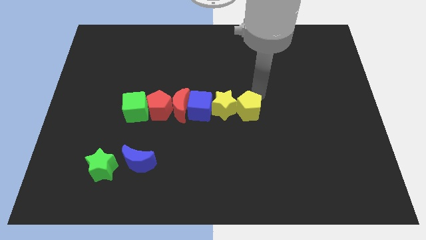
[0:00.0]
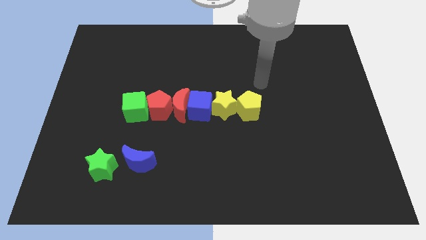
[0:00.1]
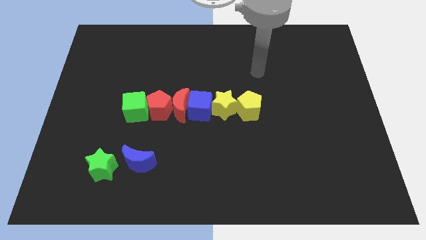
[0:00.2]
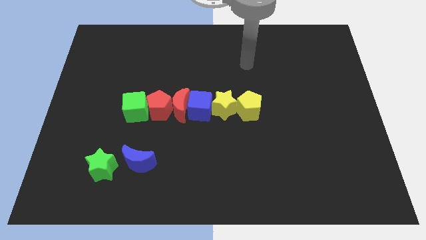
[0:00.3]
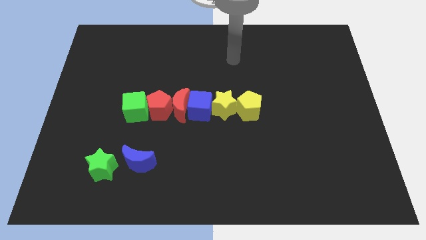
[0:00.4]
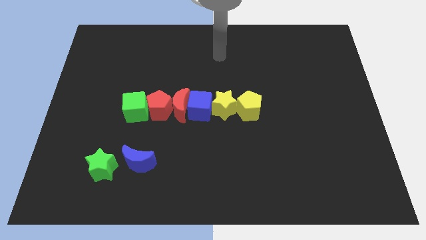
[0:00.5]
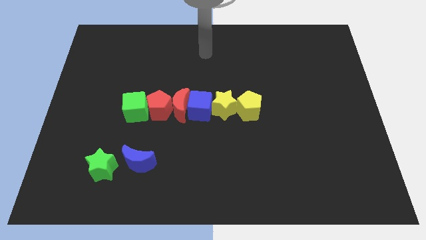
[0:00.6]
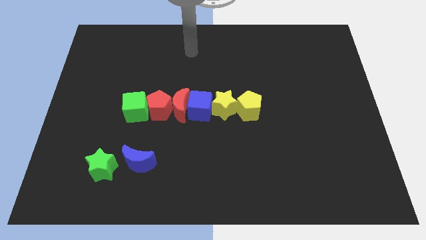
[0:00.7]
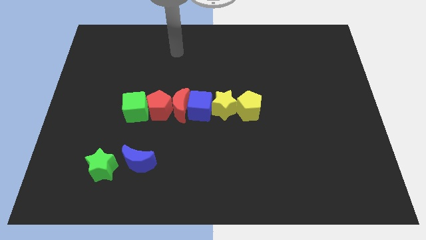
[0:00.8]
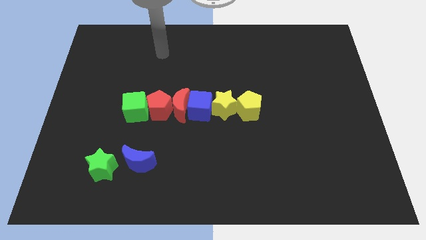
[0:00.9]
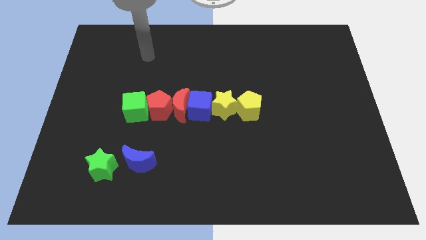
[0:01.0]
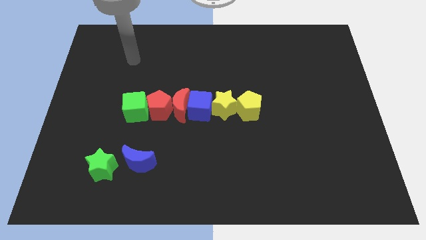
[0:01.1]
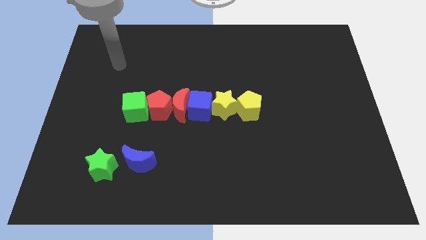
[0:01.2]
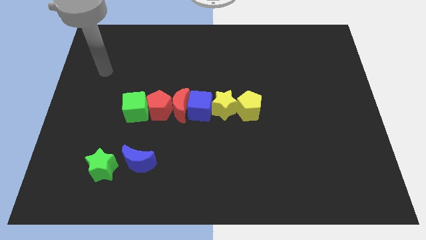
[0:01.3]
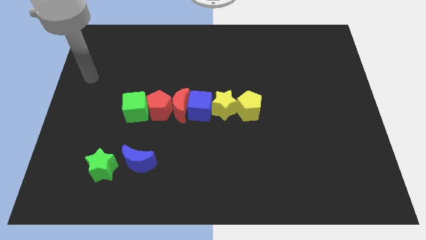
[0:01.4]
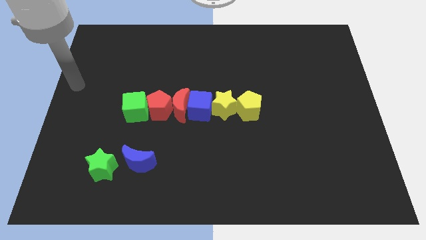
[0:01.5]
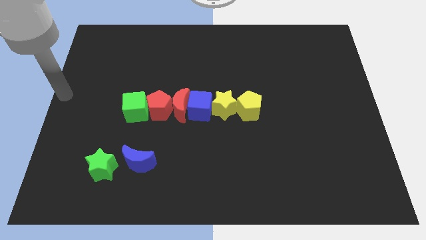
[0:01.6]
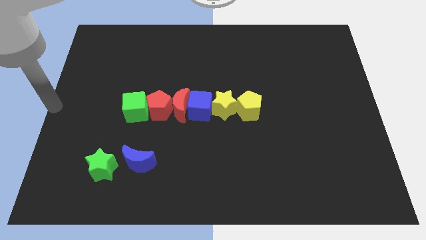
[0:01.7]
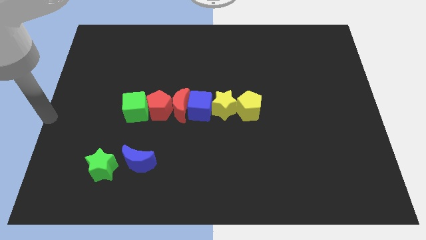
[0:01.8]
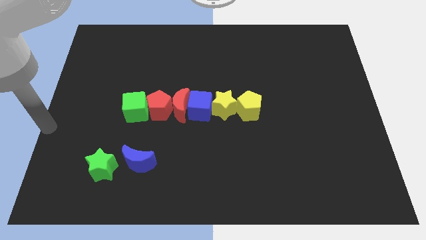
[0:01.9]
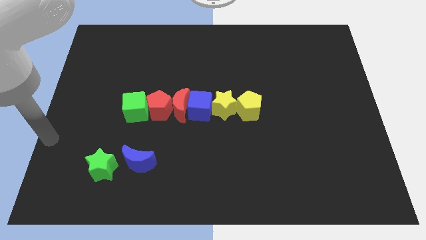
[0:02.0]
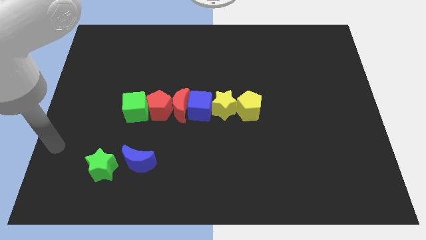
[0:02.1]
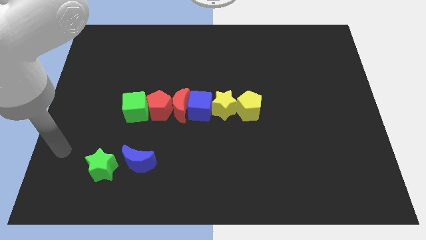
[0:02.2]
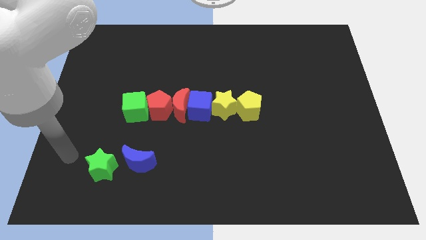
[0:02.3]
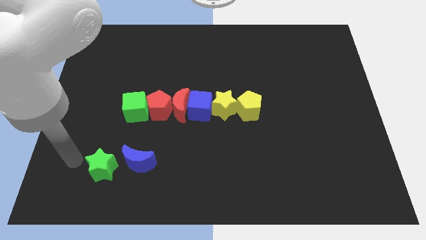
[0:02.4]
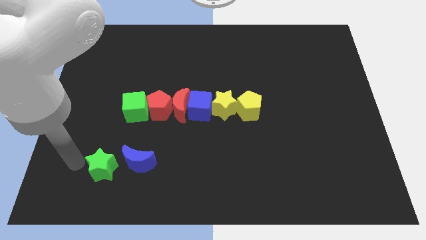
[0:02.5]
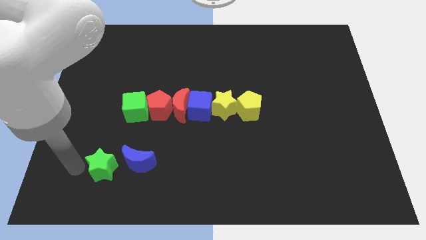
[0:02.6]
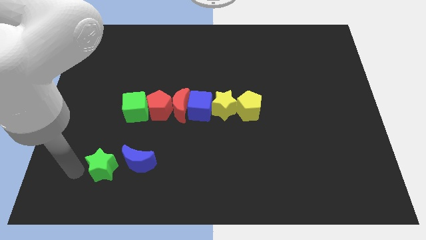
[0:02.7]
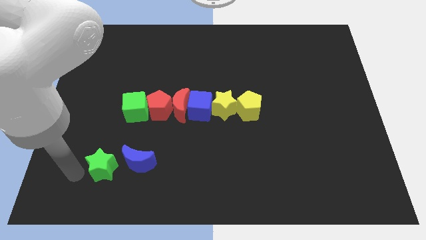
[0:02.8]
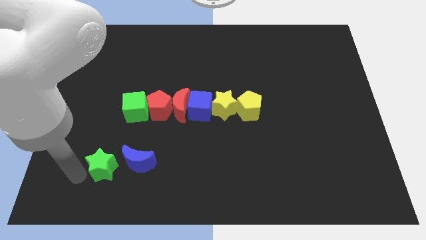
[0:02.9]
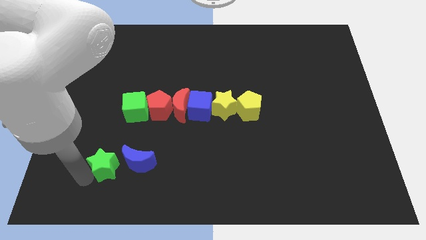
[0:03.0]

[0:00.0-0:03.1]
tap the left side of the green star

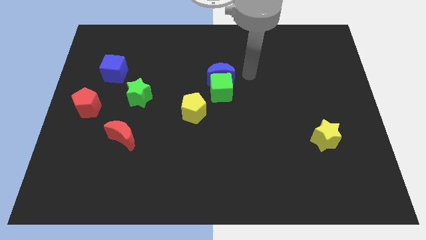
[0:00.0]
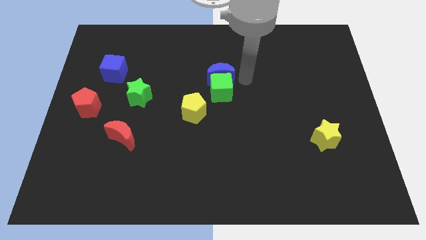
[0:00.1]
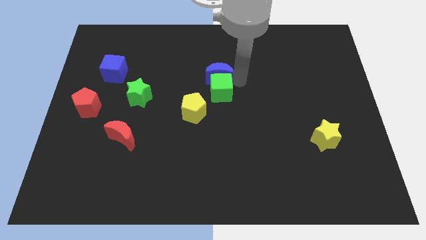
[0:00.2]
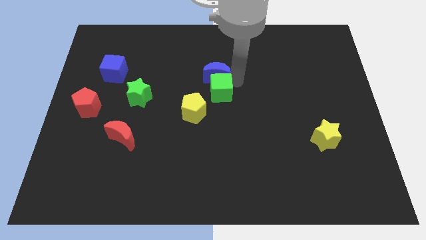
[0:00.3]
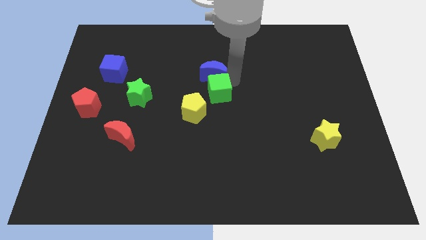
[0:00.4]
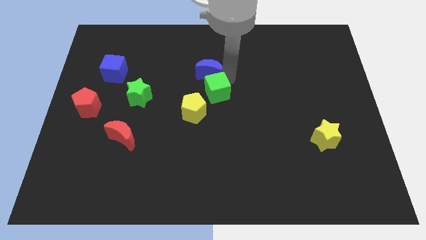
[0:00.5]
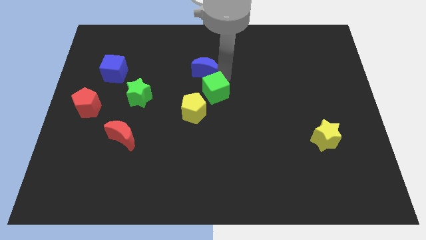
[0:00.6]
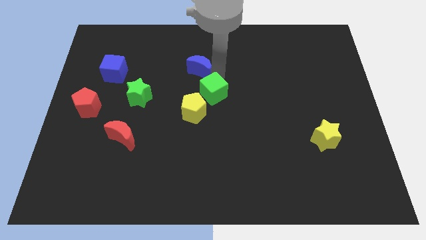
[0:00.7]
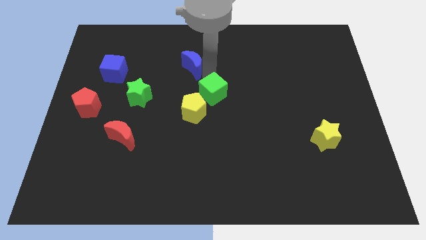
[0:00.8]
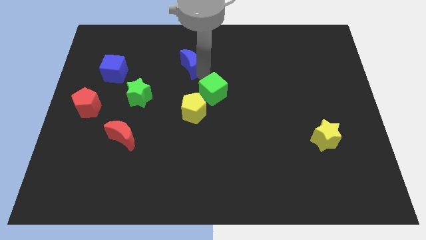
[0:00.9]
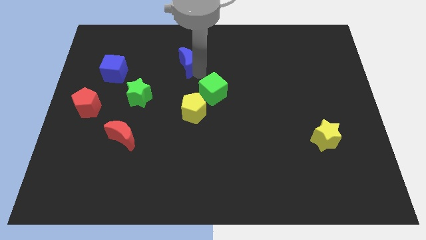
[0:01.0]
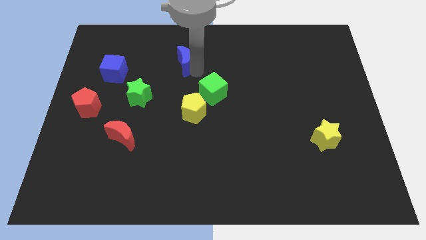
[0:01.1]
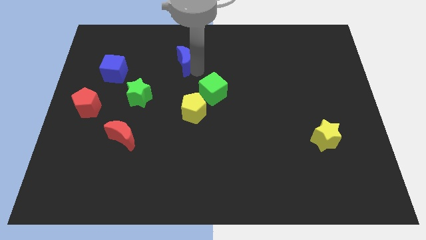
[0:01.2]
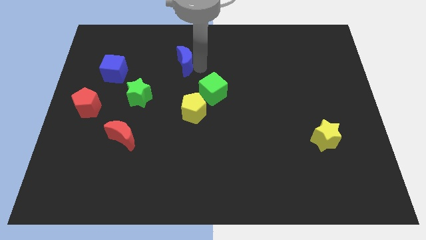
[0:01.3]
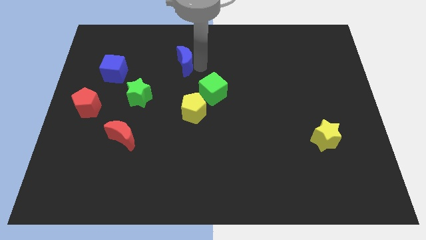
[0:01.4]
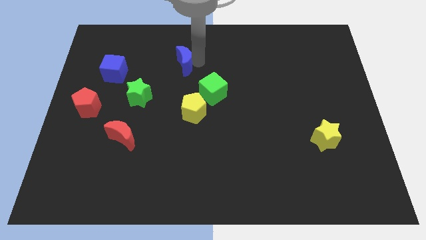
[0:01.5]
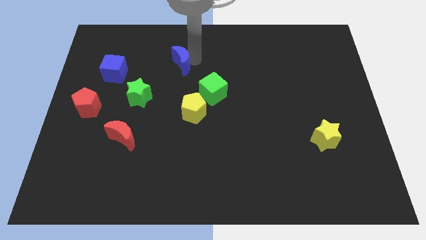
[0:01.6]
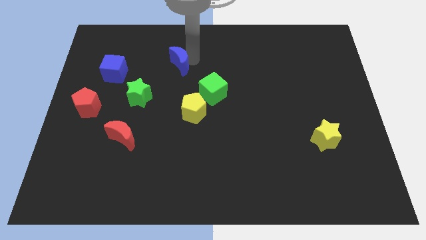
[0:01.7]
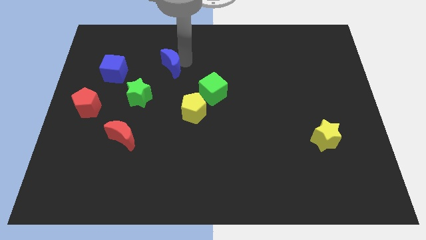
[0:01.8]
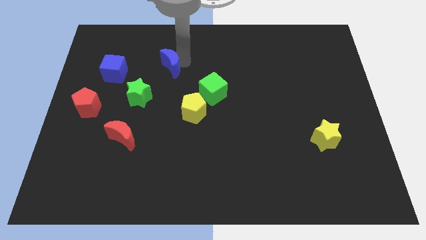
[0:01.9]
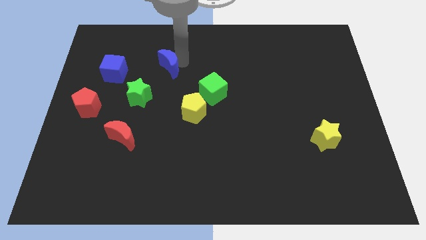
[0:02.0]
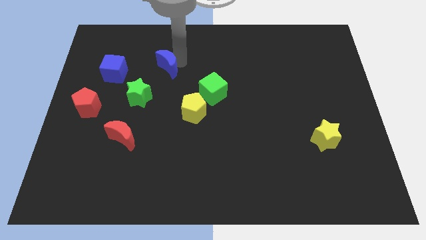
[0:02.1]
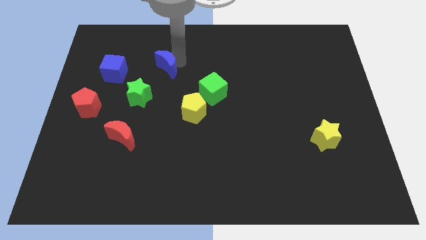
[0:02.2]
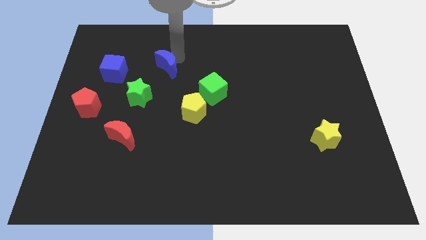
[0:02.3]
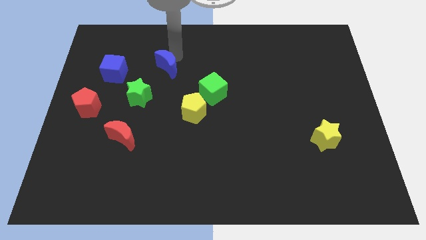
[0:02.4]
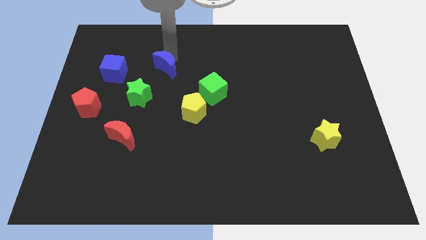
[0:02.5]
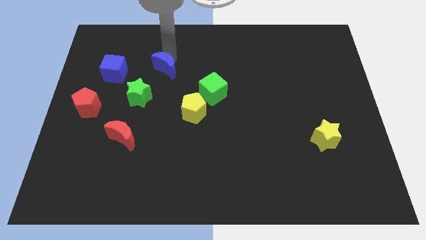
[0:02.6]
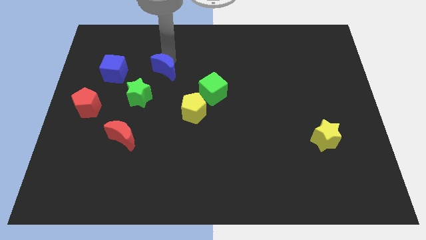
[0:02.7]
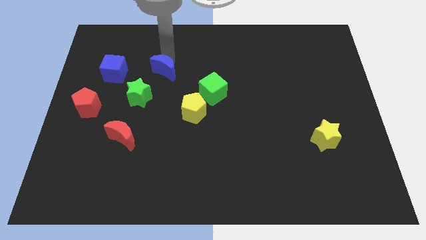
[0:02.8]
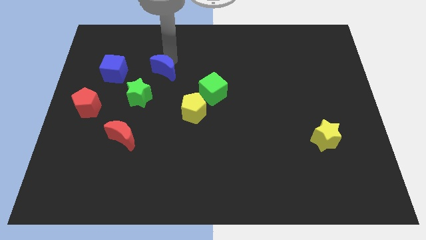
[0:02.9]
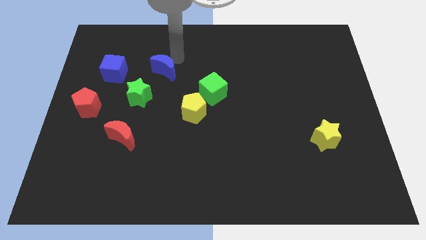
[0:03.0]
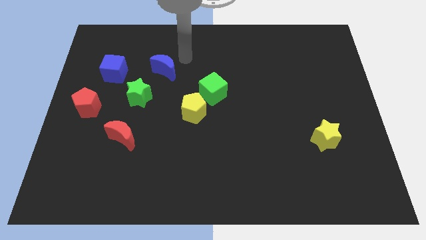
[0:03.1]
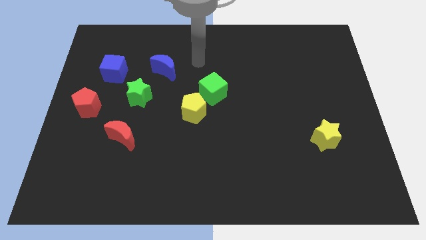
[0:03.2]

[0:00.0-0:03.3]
place the blue crescent to the right of the blue cube

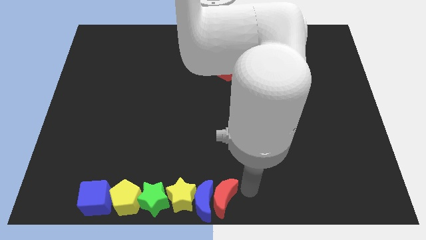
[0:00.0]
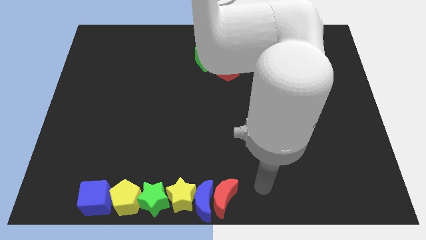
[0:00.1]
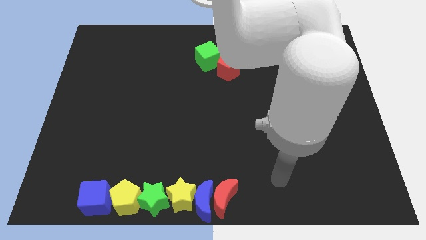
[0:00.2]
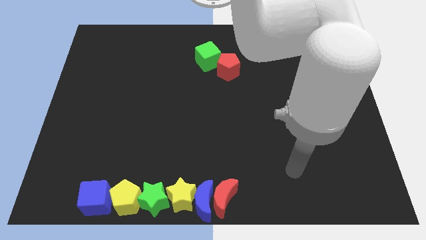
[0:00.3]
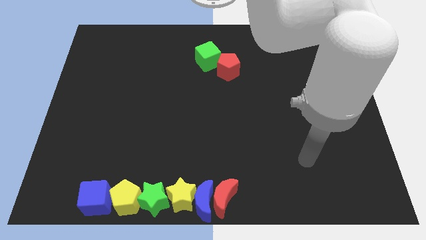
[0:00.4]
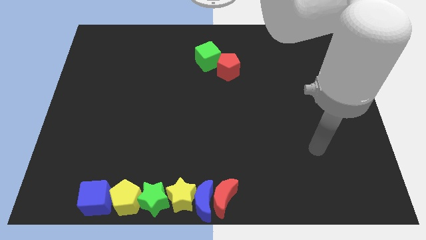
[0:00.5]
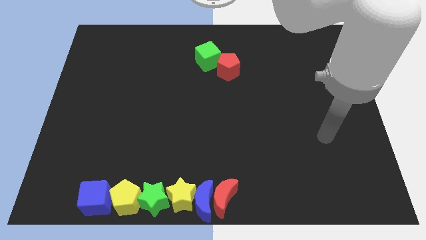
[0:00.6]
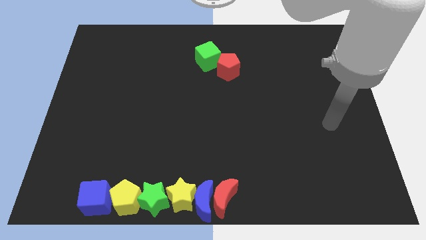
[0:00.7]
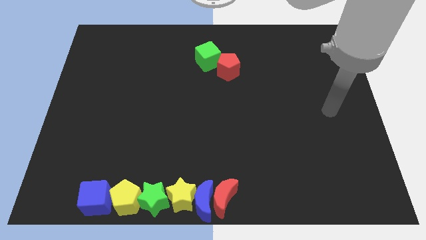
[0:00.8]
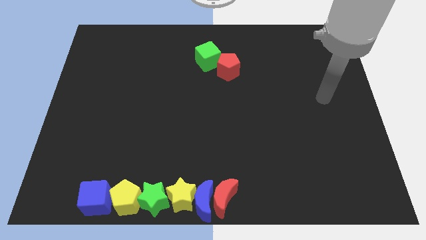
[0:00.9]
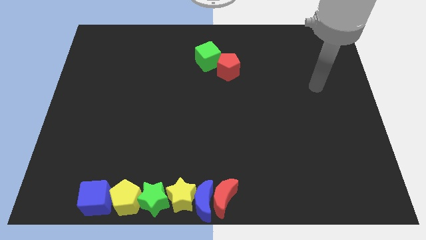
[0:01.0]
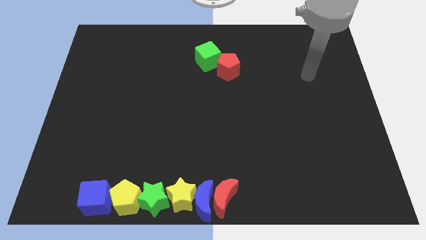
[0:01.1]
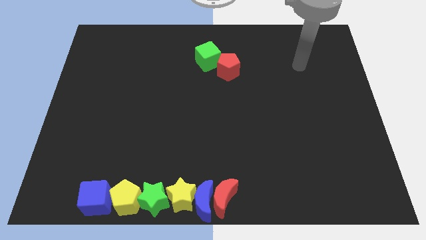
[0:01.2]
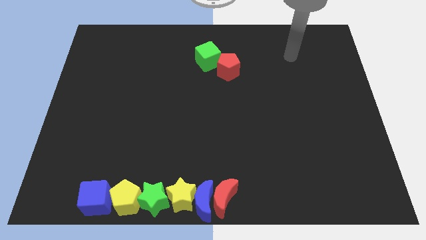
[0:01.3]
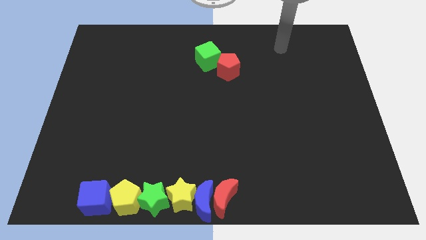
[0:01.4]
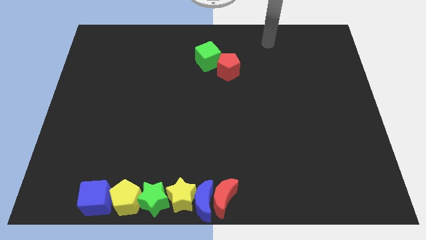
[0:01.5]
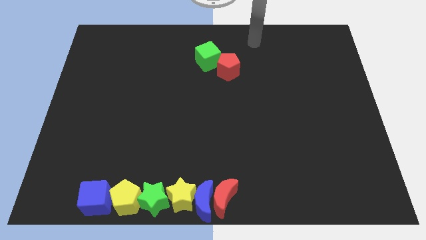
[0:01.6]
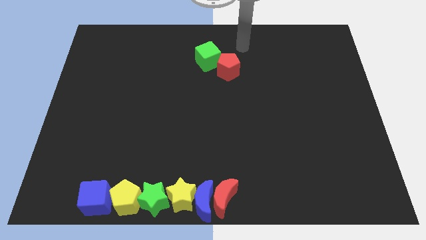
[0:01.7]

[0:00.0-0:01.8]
push arm to the top center of the board

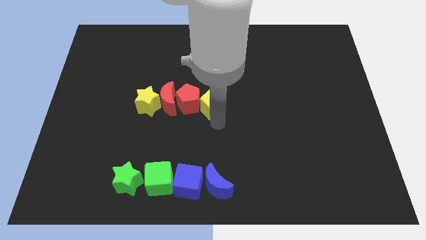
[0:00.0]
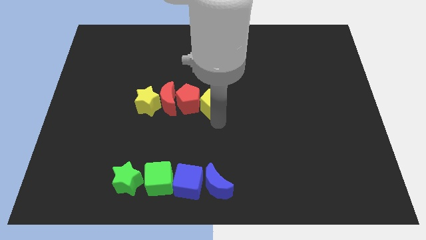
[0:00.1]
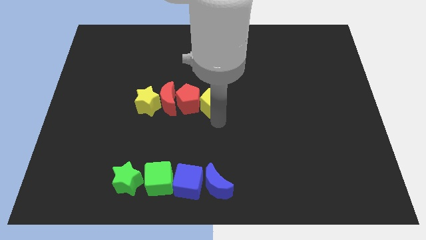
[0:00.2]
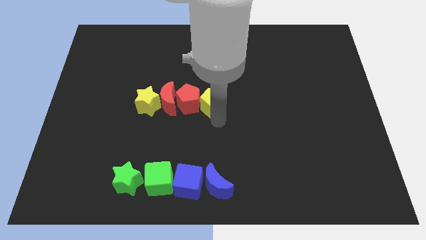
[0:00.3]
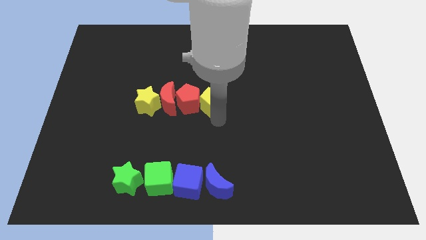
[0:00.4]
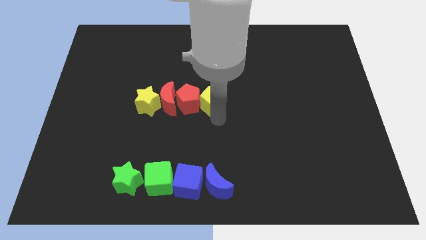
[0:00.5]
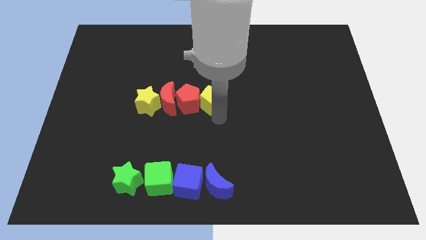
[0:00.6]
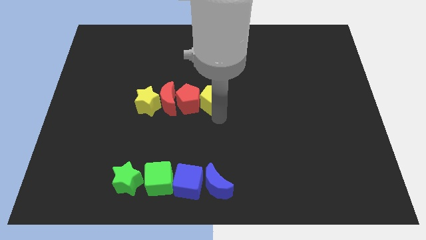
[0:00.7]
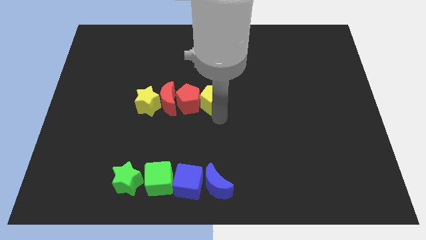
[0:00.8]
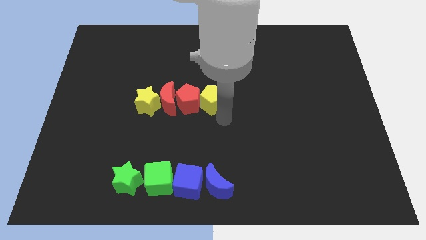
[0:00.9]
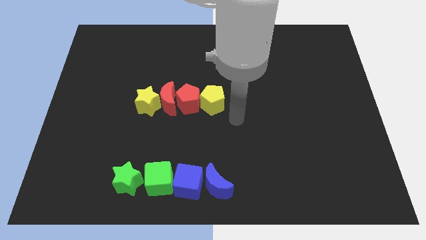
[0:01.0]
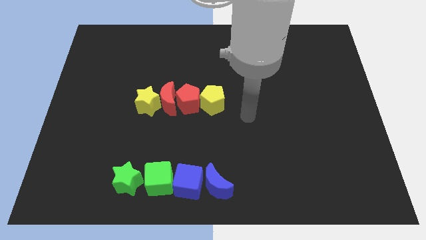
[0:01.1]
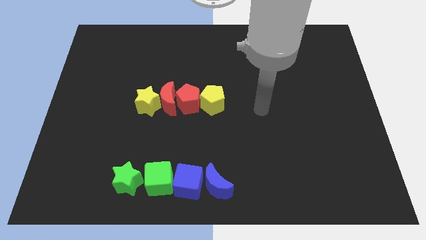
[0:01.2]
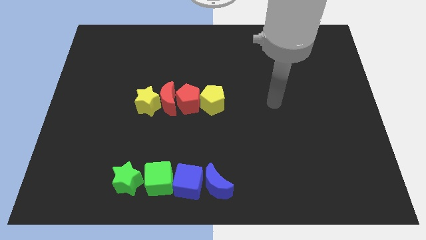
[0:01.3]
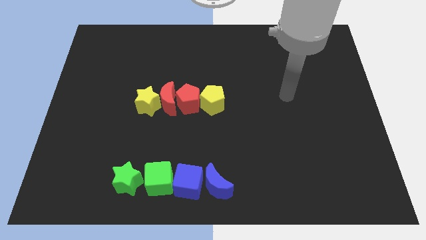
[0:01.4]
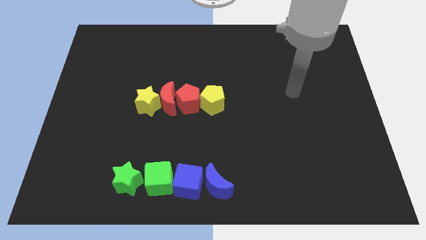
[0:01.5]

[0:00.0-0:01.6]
slide the yellow pentagon upward
